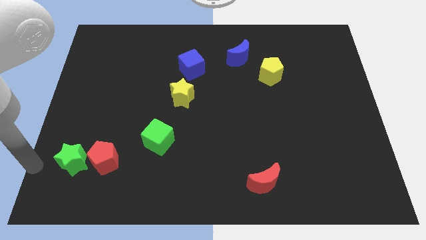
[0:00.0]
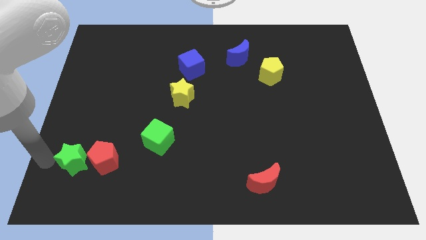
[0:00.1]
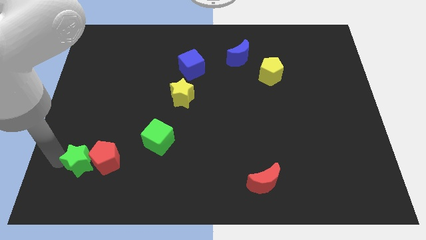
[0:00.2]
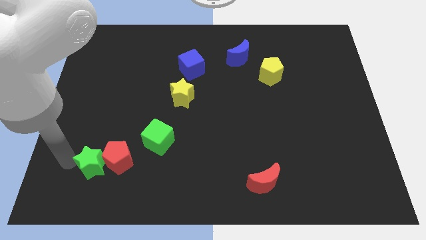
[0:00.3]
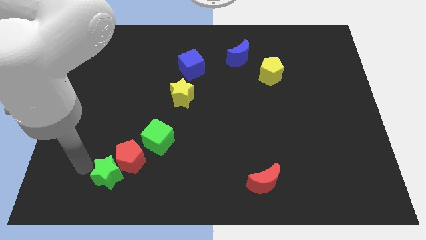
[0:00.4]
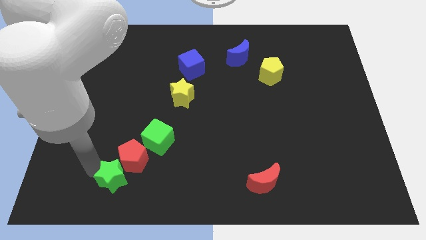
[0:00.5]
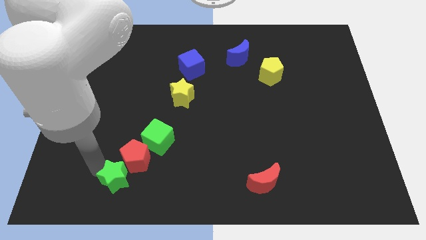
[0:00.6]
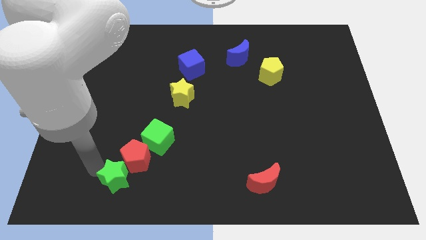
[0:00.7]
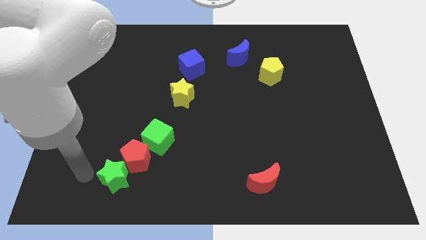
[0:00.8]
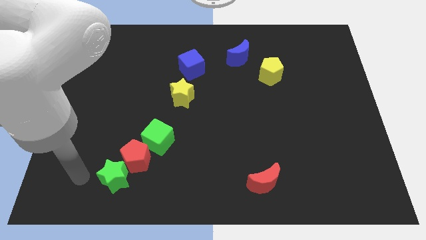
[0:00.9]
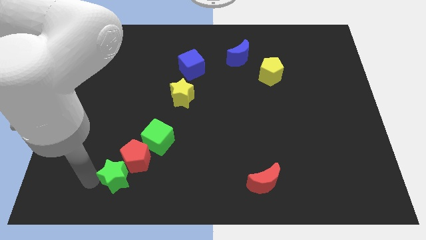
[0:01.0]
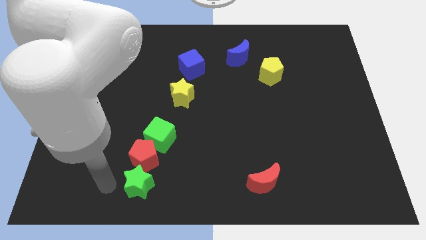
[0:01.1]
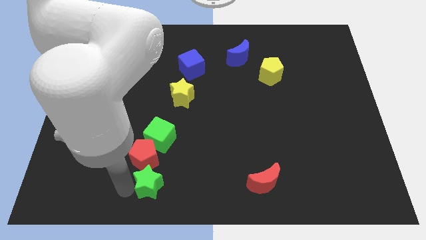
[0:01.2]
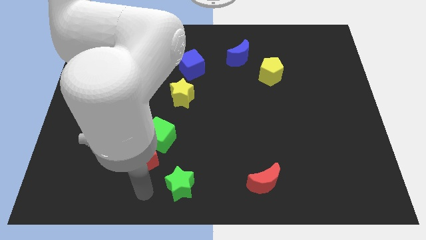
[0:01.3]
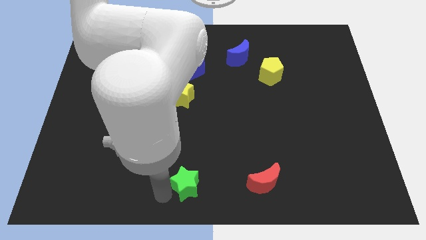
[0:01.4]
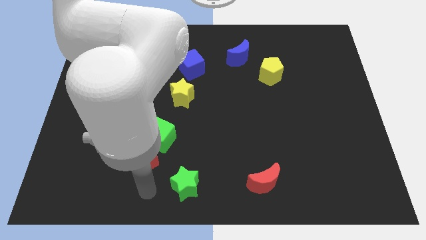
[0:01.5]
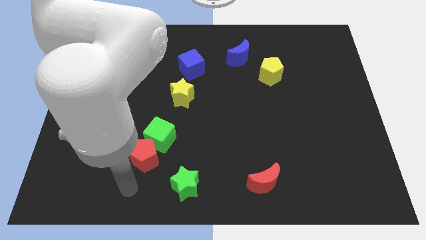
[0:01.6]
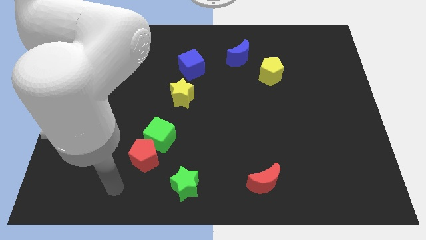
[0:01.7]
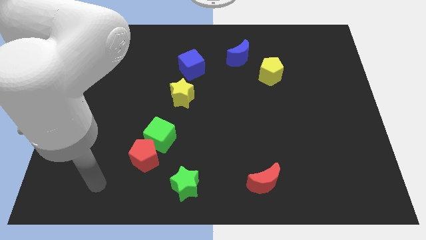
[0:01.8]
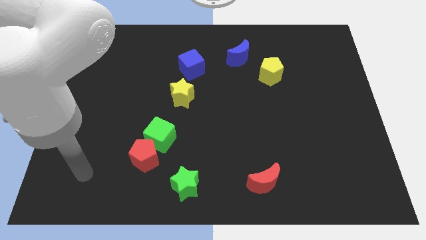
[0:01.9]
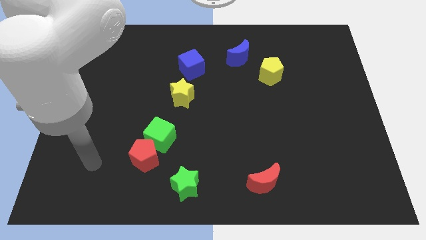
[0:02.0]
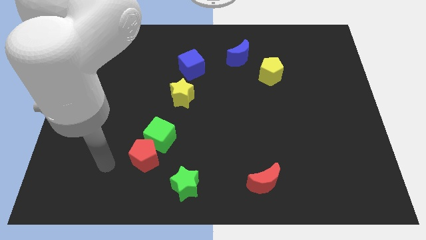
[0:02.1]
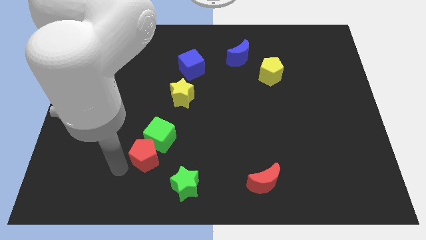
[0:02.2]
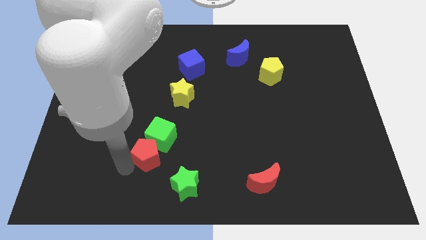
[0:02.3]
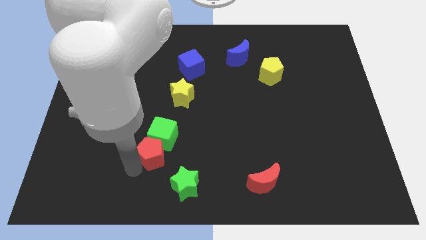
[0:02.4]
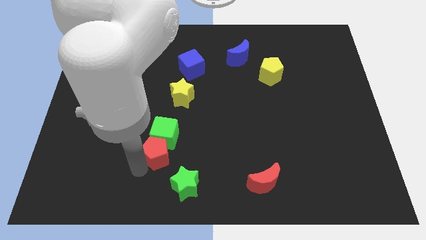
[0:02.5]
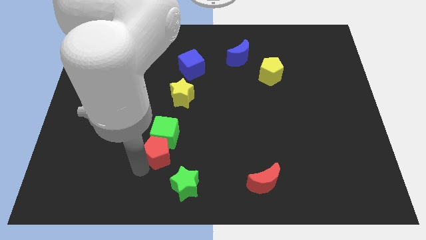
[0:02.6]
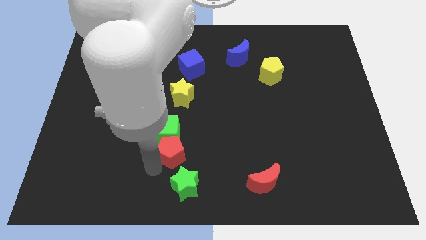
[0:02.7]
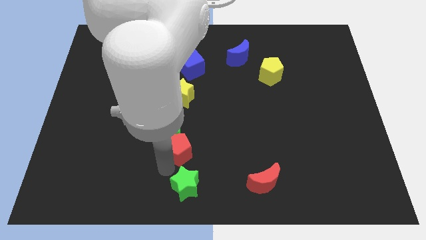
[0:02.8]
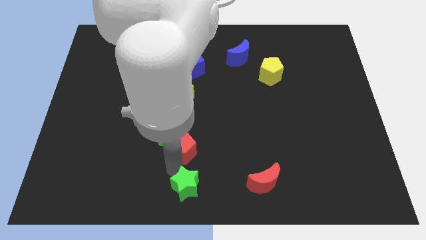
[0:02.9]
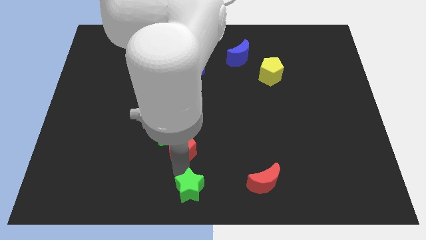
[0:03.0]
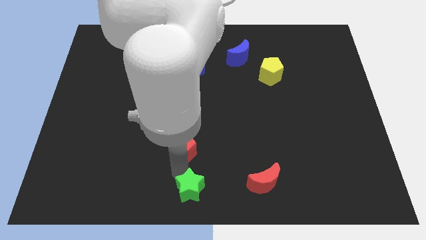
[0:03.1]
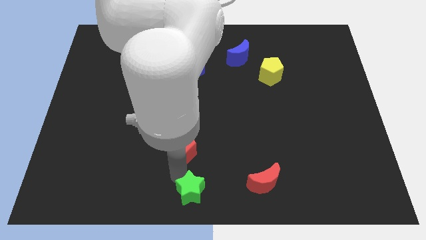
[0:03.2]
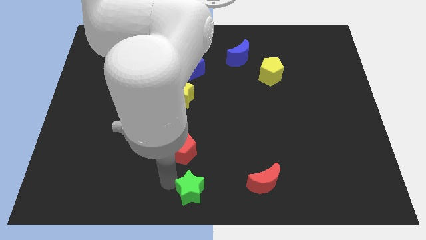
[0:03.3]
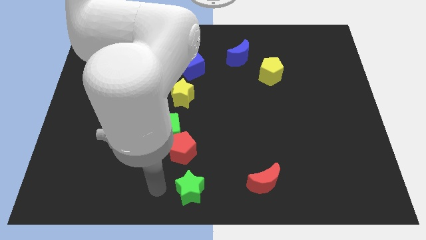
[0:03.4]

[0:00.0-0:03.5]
push the green star and red pentagon to the bottom center

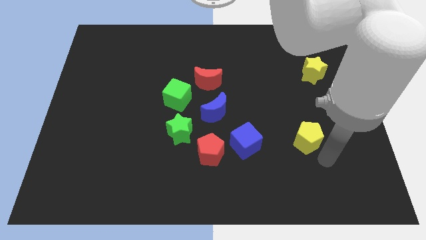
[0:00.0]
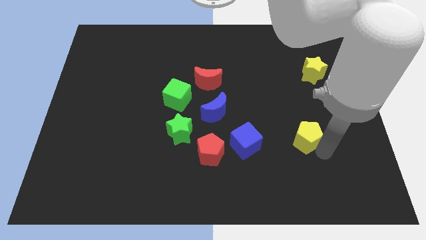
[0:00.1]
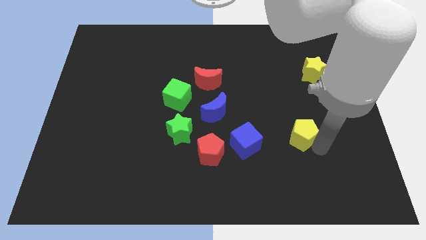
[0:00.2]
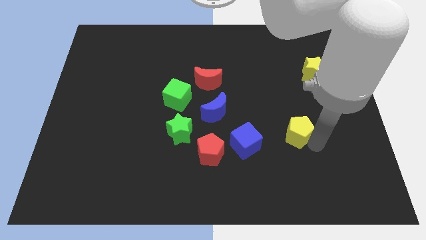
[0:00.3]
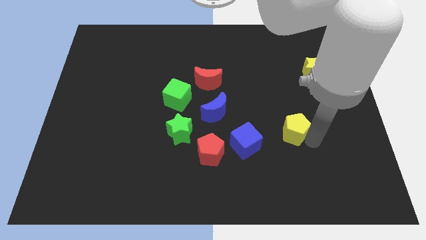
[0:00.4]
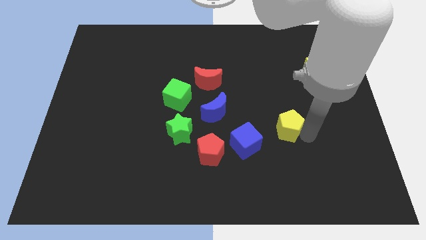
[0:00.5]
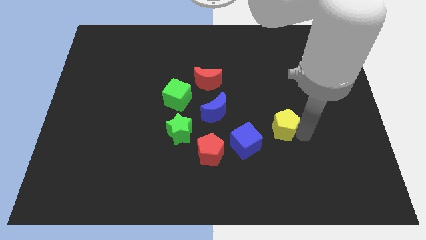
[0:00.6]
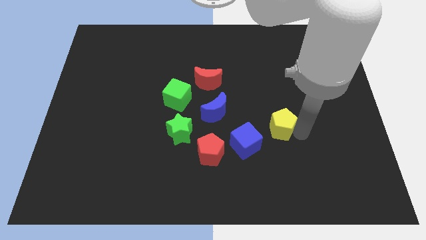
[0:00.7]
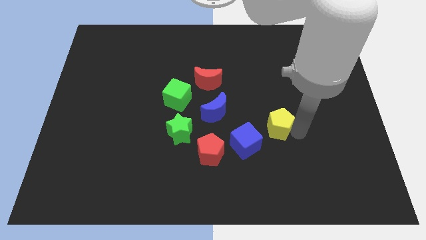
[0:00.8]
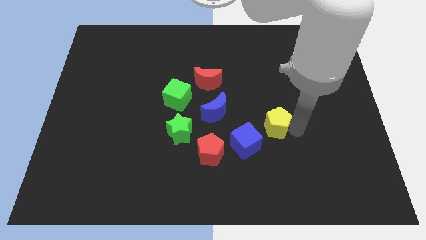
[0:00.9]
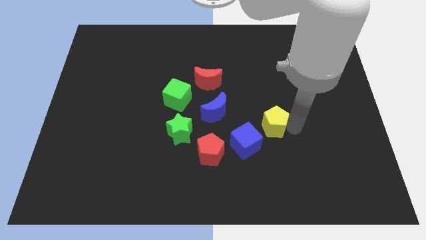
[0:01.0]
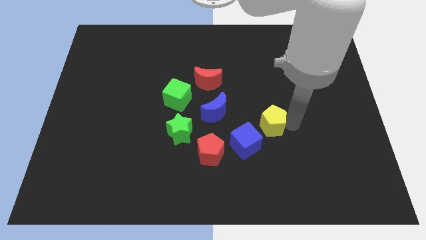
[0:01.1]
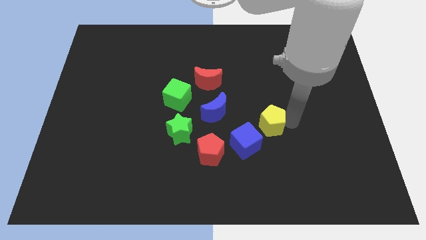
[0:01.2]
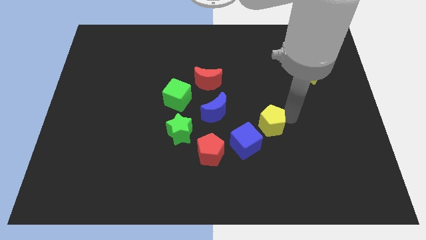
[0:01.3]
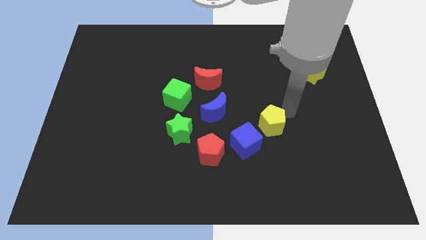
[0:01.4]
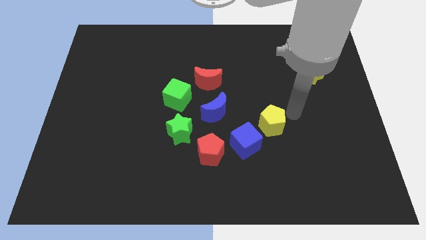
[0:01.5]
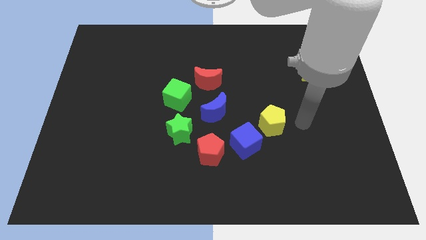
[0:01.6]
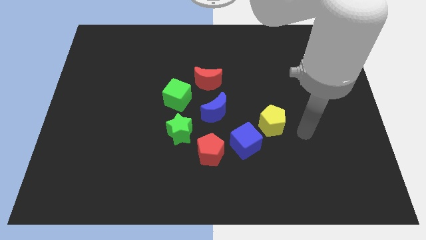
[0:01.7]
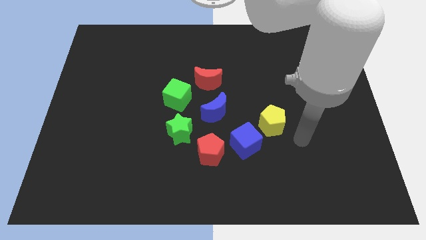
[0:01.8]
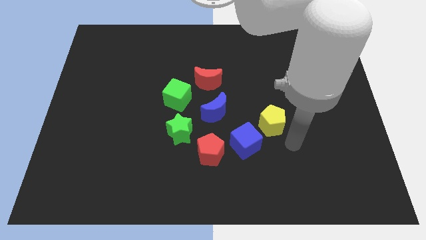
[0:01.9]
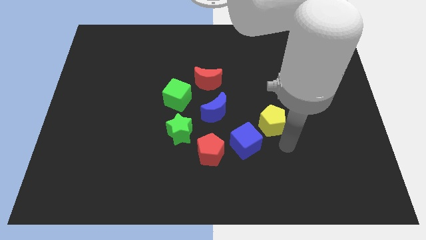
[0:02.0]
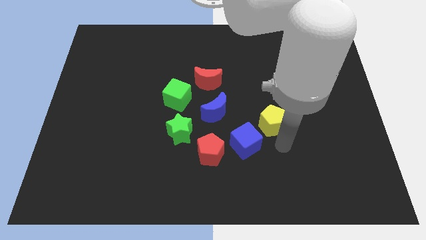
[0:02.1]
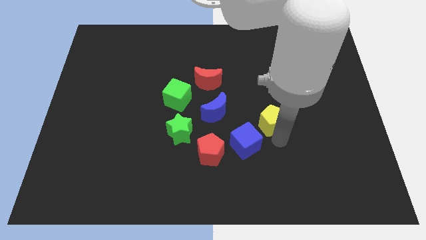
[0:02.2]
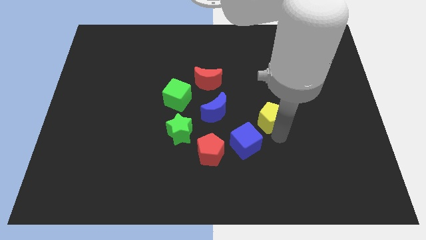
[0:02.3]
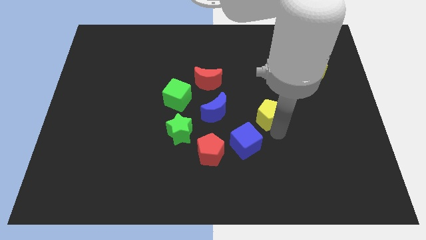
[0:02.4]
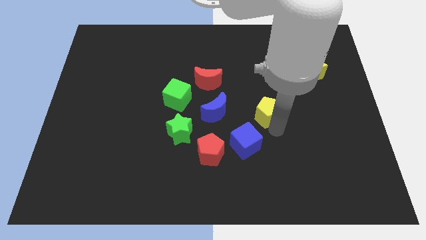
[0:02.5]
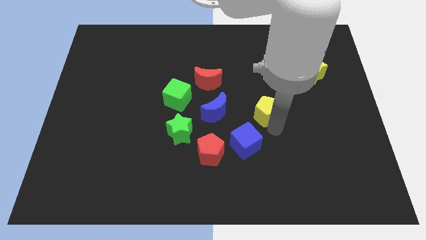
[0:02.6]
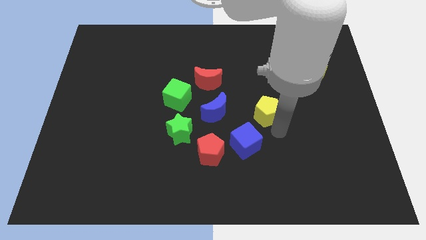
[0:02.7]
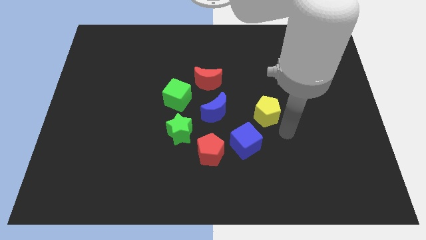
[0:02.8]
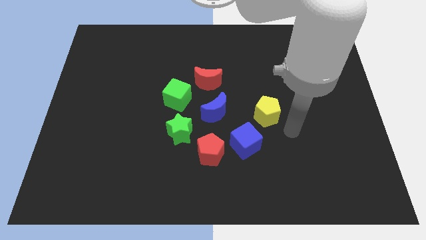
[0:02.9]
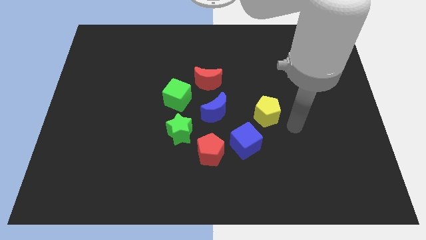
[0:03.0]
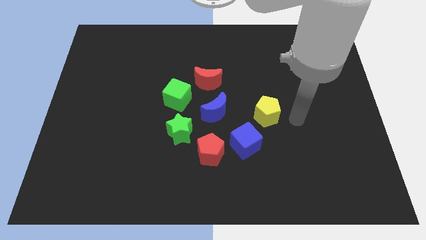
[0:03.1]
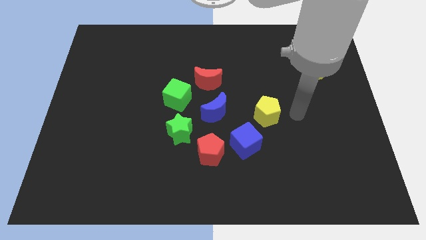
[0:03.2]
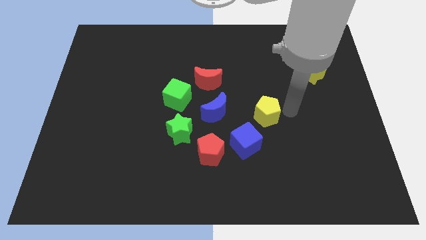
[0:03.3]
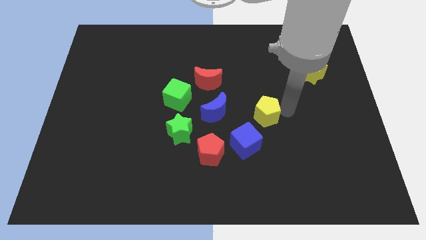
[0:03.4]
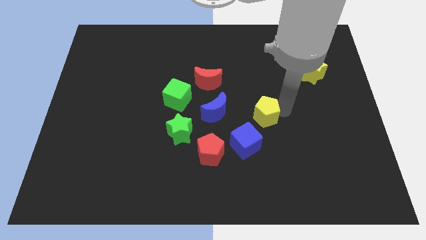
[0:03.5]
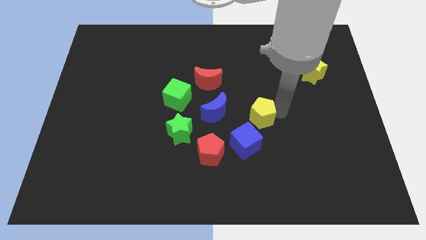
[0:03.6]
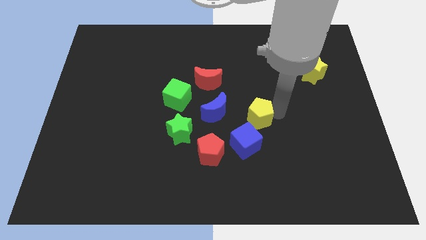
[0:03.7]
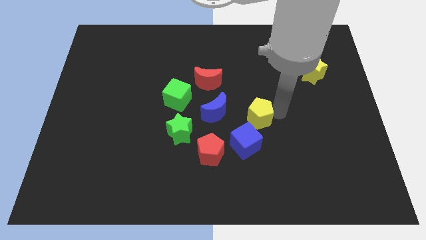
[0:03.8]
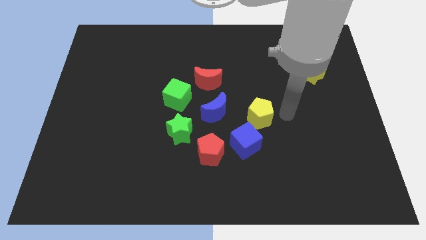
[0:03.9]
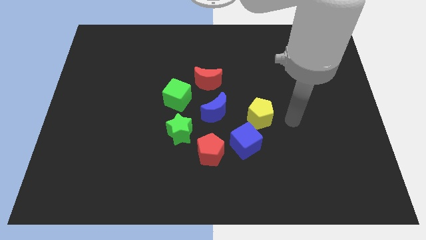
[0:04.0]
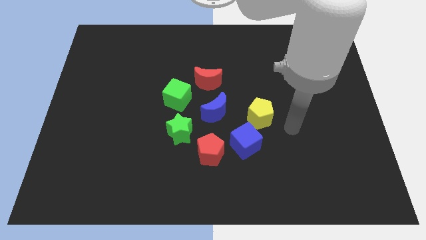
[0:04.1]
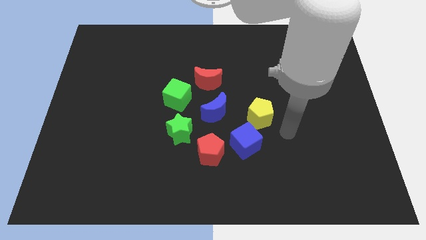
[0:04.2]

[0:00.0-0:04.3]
move the yellow pentagon towards the blue cube

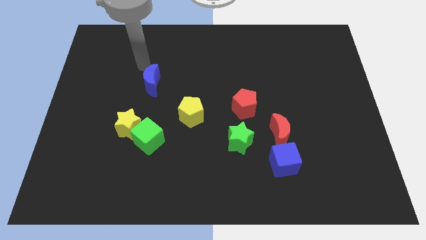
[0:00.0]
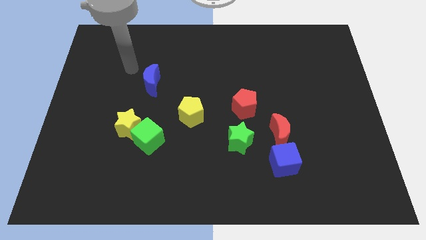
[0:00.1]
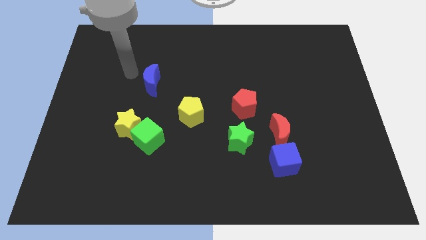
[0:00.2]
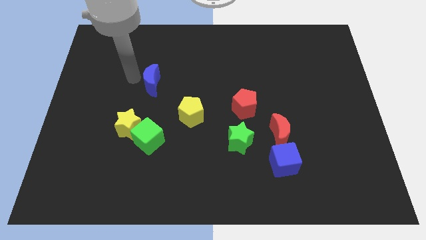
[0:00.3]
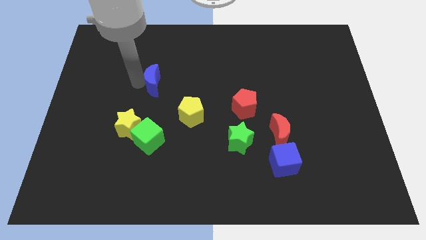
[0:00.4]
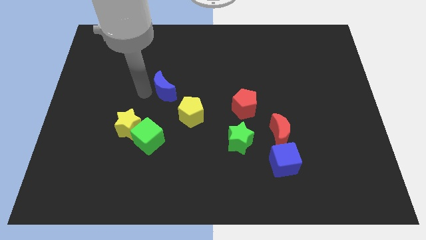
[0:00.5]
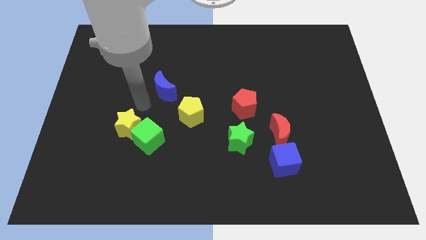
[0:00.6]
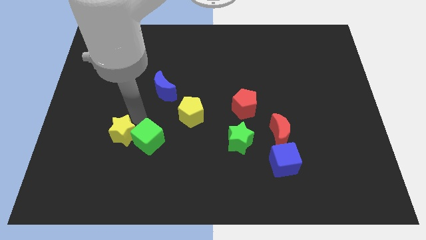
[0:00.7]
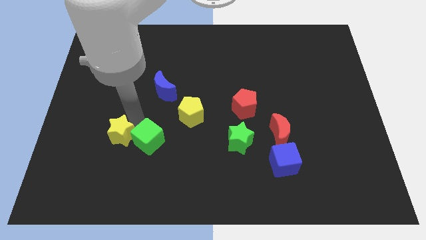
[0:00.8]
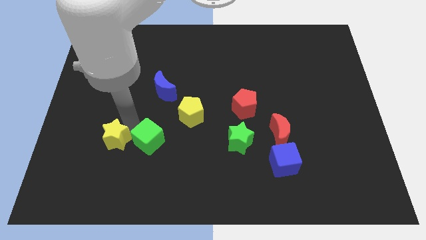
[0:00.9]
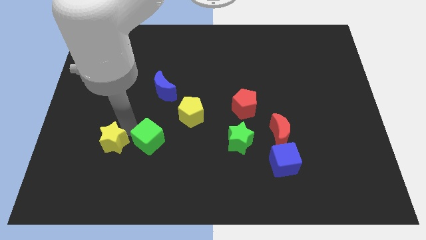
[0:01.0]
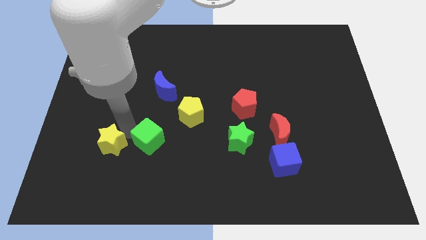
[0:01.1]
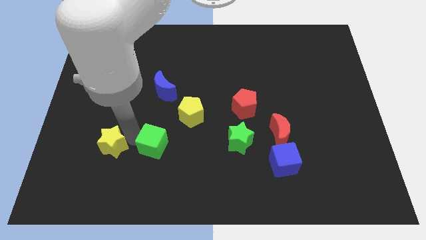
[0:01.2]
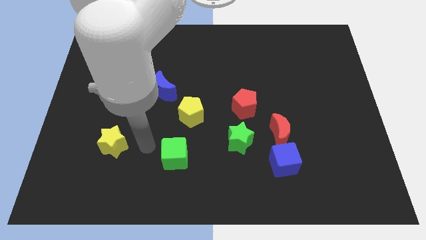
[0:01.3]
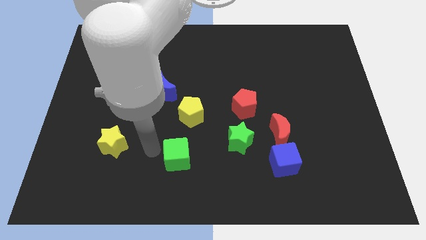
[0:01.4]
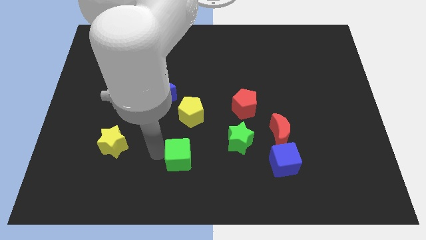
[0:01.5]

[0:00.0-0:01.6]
separate yellow star and green cube
